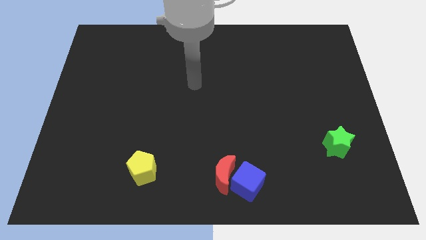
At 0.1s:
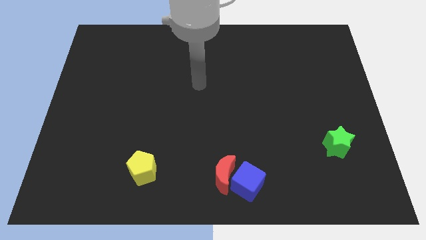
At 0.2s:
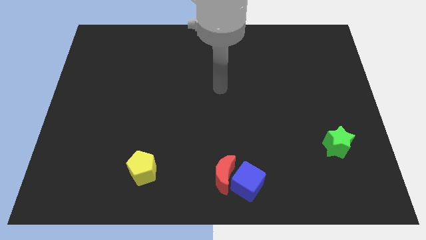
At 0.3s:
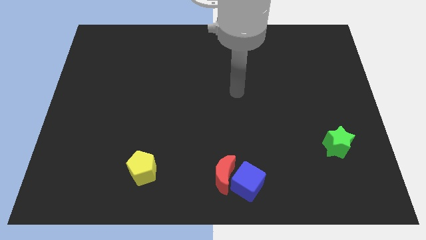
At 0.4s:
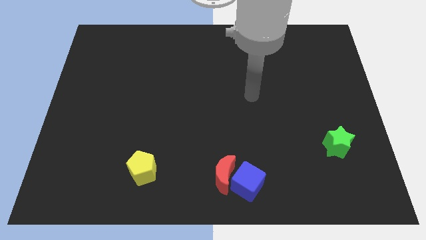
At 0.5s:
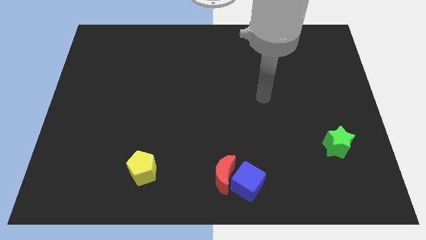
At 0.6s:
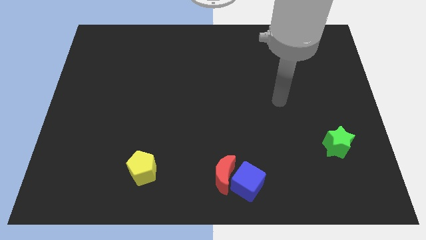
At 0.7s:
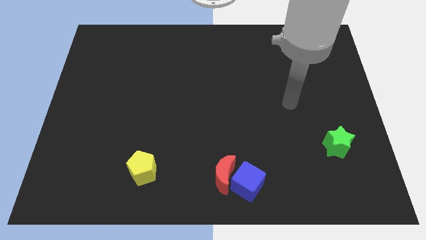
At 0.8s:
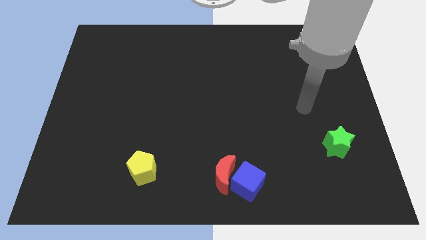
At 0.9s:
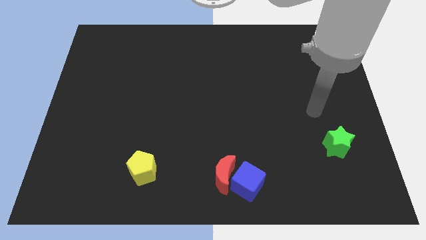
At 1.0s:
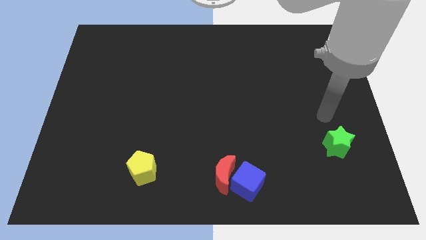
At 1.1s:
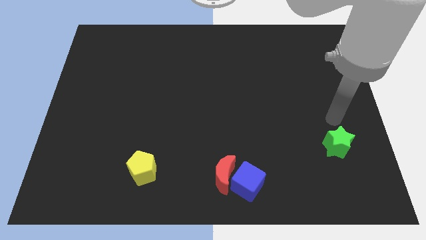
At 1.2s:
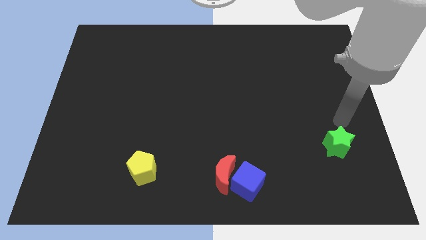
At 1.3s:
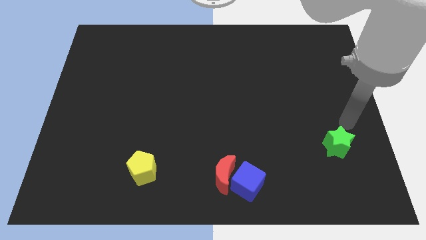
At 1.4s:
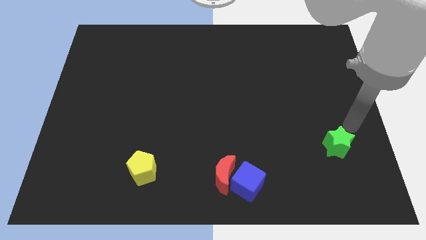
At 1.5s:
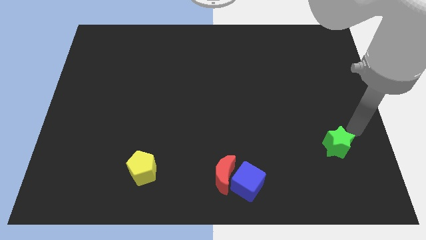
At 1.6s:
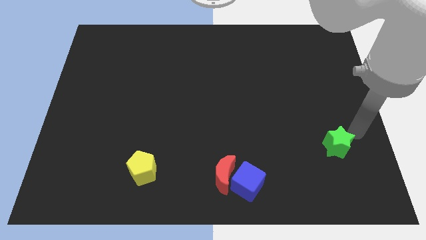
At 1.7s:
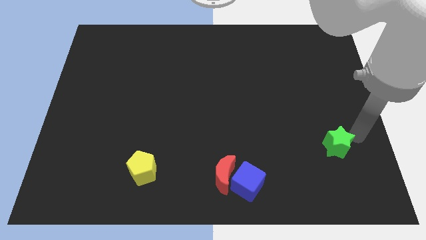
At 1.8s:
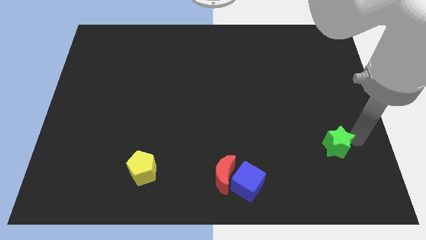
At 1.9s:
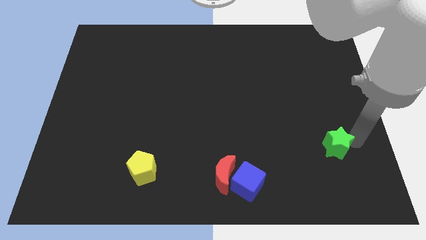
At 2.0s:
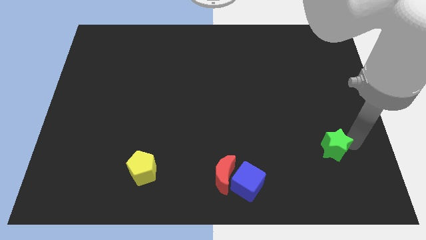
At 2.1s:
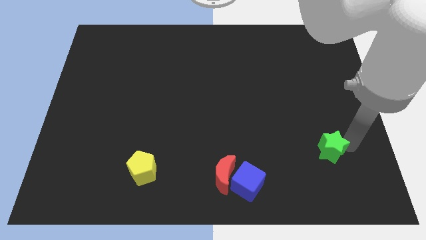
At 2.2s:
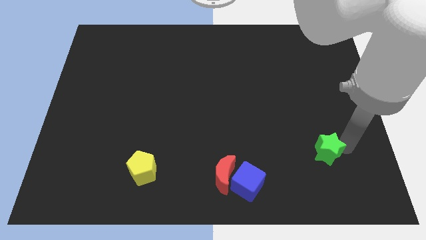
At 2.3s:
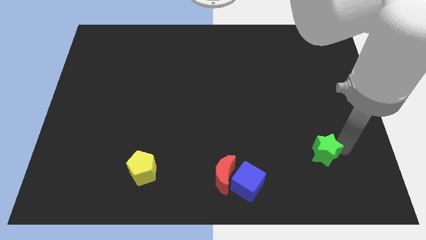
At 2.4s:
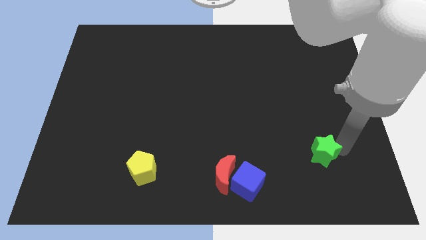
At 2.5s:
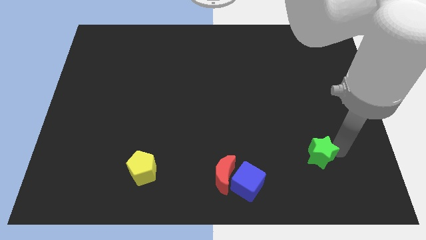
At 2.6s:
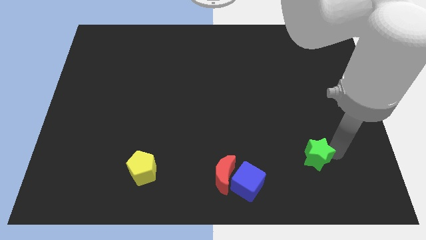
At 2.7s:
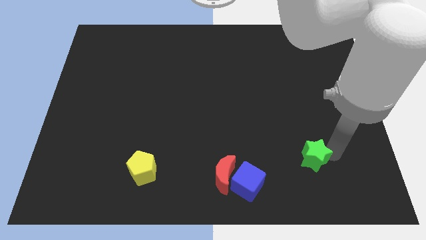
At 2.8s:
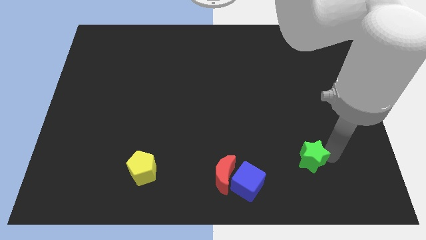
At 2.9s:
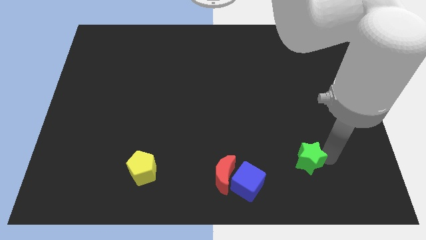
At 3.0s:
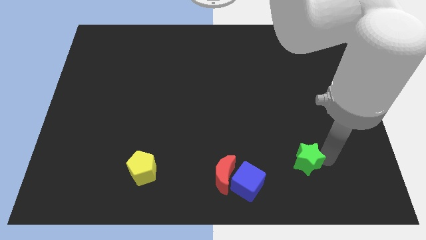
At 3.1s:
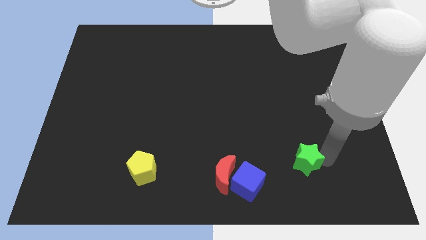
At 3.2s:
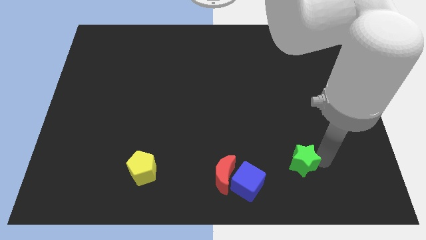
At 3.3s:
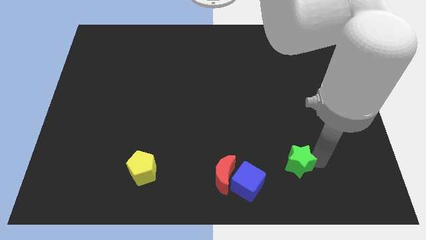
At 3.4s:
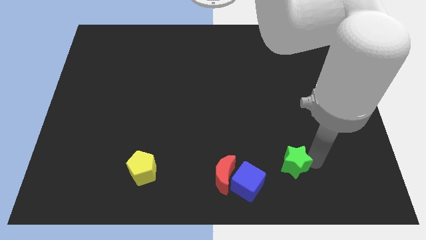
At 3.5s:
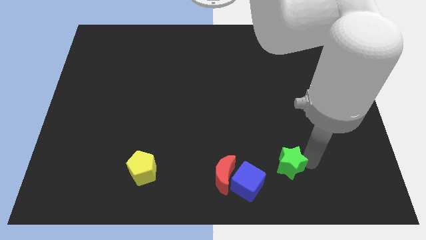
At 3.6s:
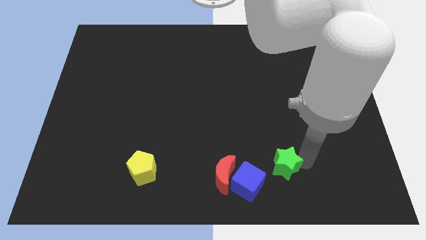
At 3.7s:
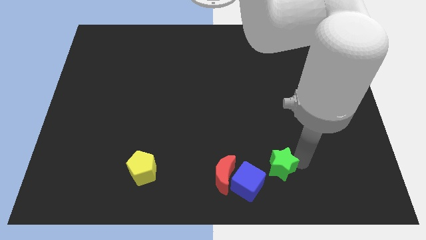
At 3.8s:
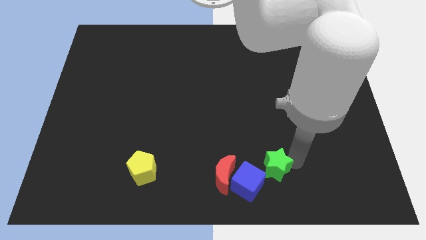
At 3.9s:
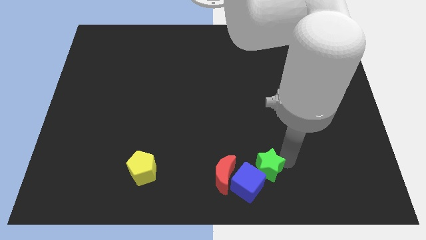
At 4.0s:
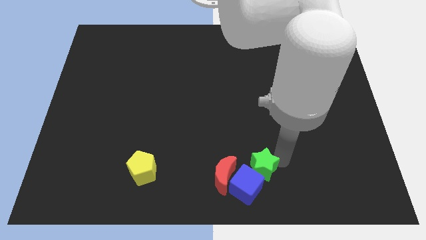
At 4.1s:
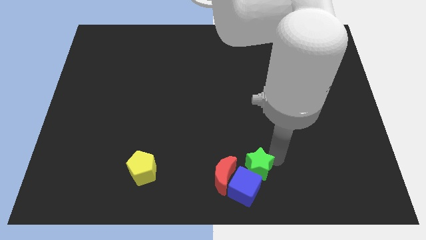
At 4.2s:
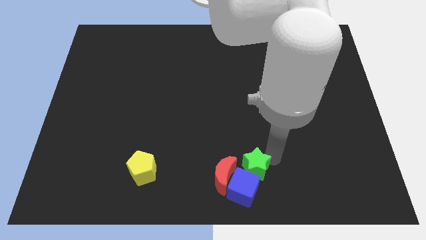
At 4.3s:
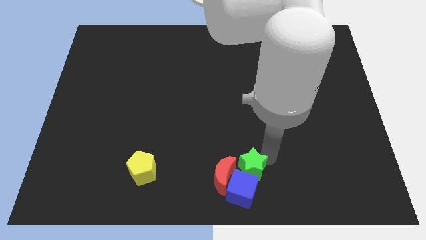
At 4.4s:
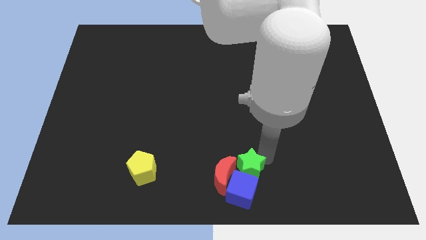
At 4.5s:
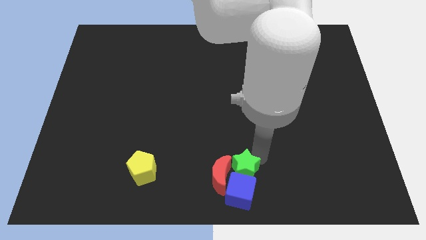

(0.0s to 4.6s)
put the green block next to the red block

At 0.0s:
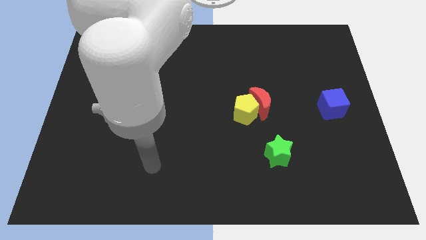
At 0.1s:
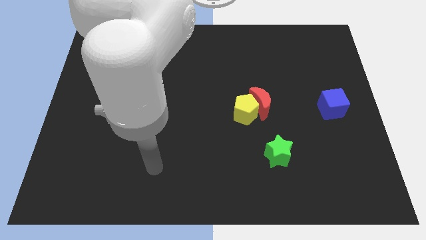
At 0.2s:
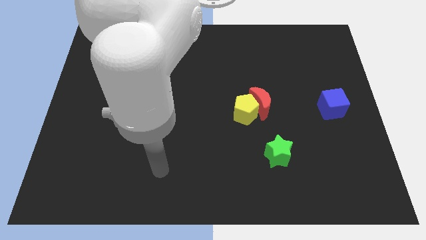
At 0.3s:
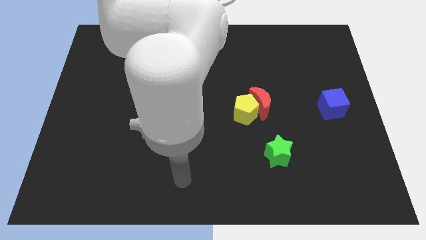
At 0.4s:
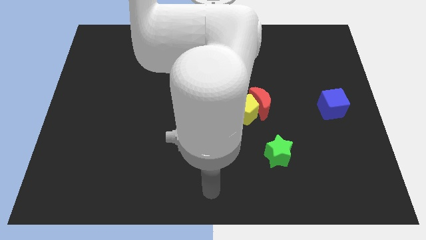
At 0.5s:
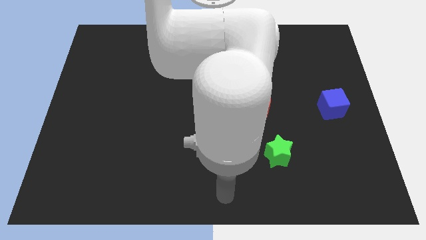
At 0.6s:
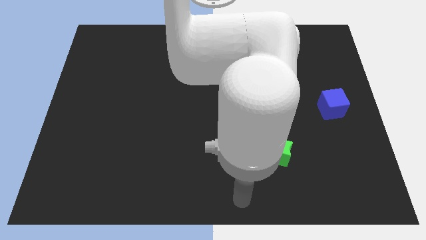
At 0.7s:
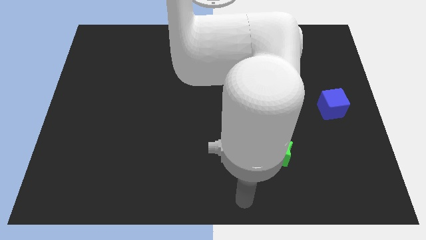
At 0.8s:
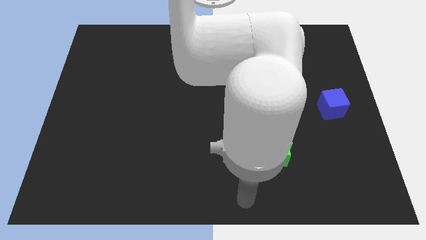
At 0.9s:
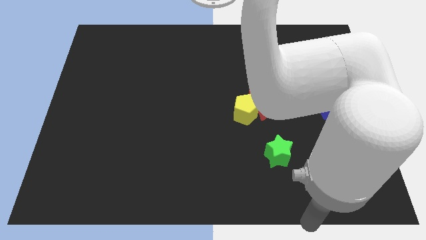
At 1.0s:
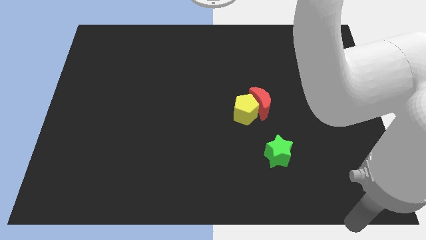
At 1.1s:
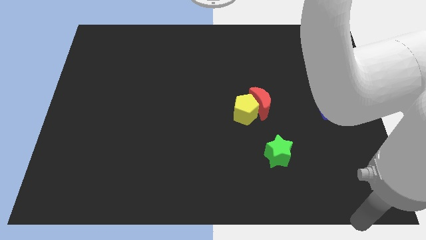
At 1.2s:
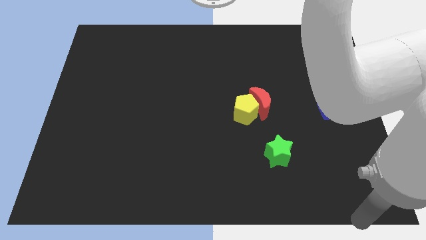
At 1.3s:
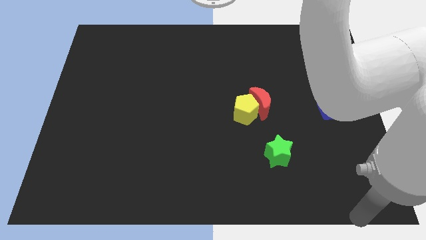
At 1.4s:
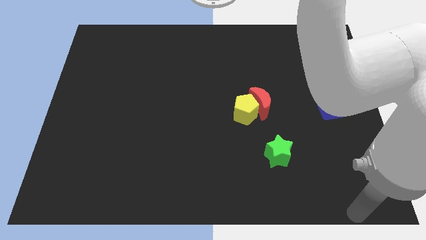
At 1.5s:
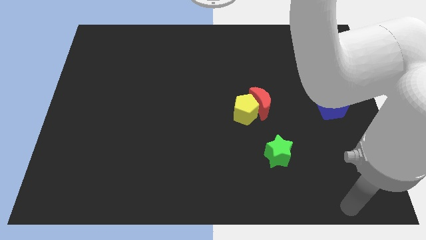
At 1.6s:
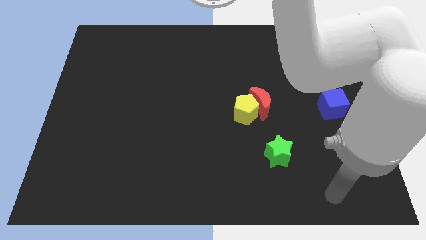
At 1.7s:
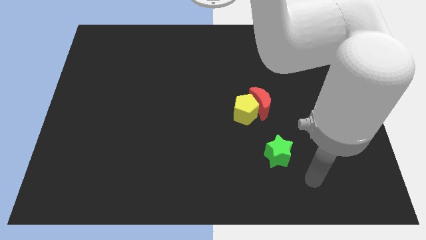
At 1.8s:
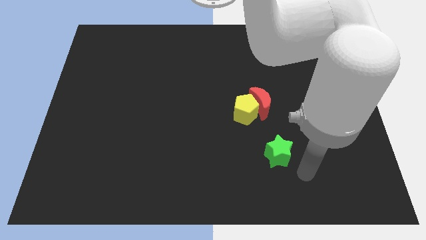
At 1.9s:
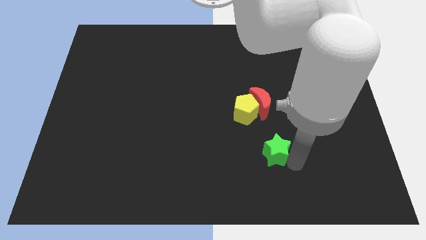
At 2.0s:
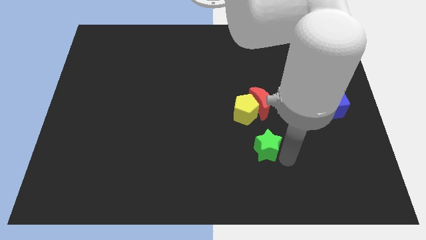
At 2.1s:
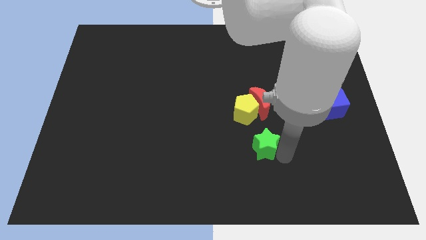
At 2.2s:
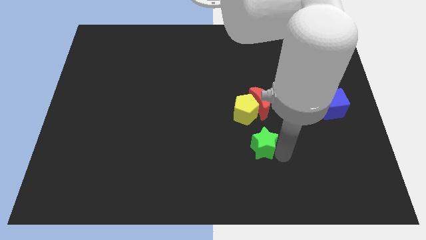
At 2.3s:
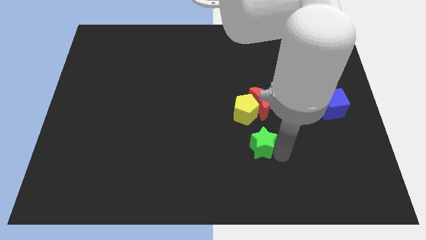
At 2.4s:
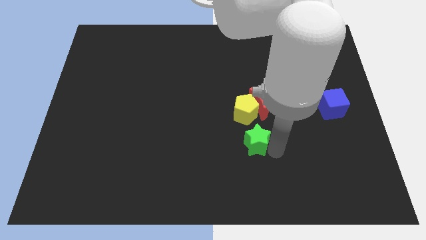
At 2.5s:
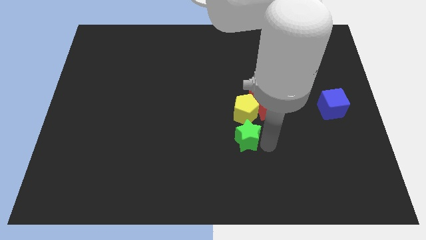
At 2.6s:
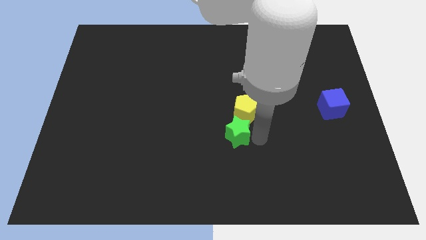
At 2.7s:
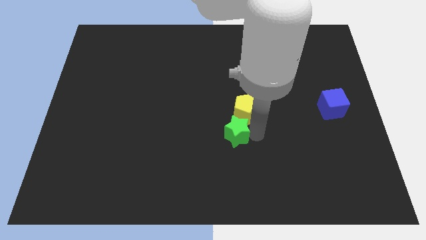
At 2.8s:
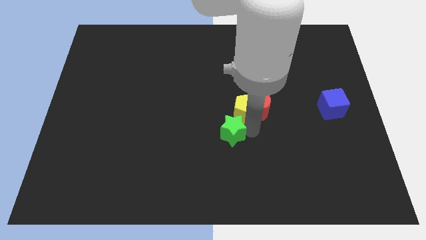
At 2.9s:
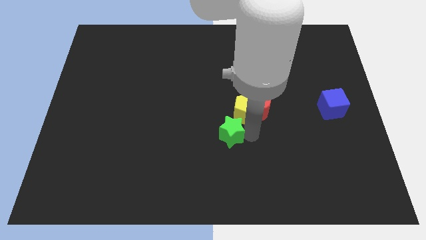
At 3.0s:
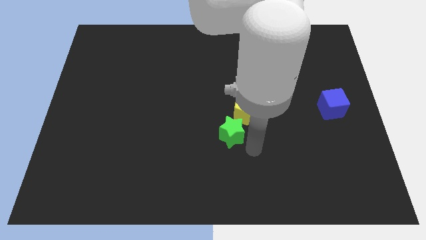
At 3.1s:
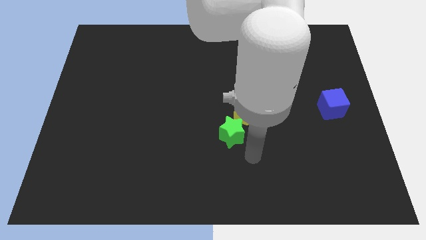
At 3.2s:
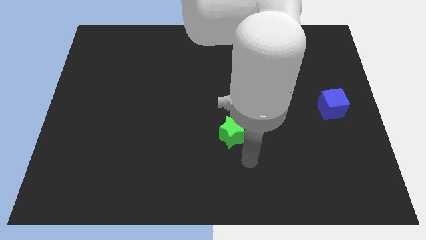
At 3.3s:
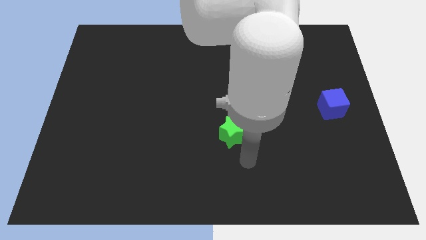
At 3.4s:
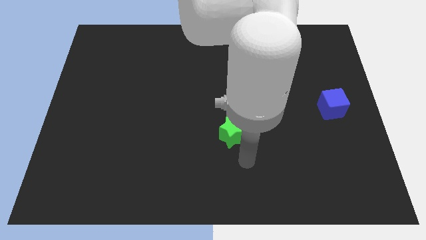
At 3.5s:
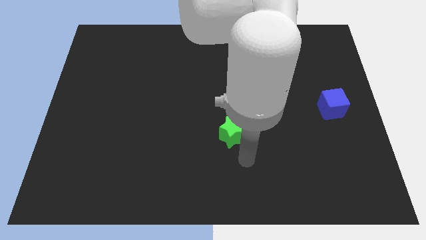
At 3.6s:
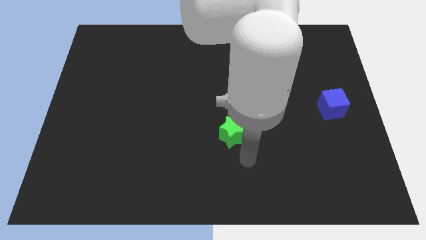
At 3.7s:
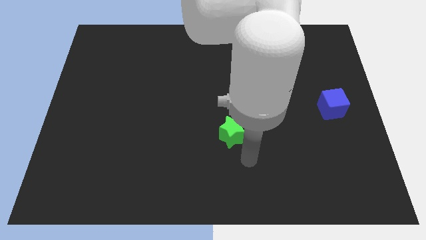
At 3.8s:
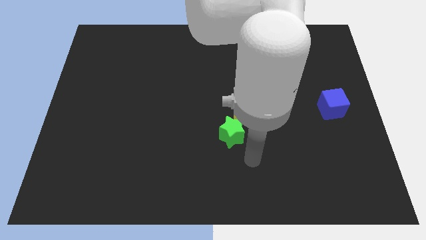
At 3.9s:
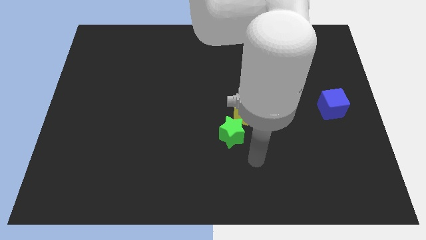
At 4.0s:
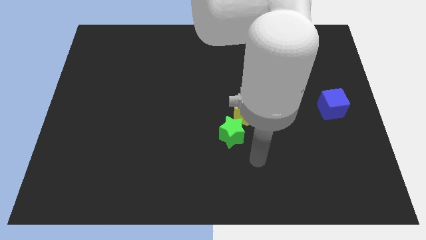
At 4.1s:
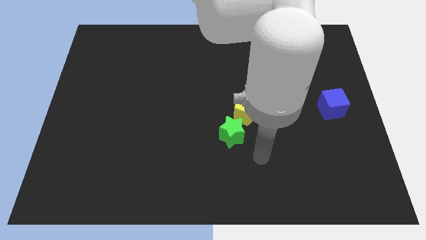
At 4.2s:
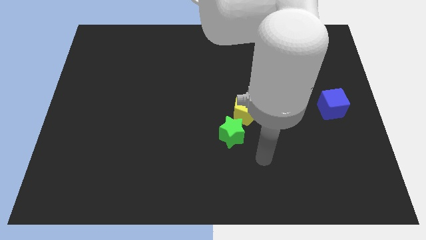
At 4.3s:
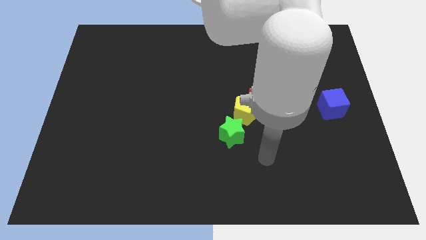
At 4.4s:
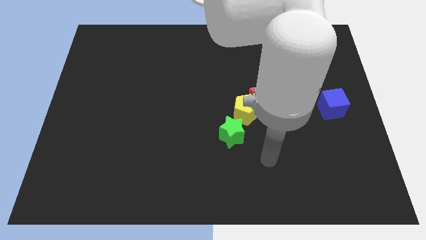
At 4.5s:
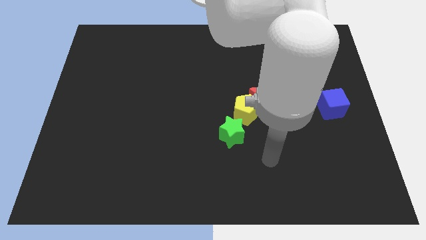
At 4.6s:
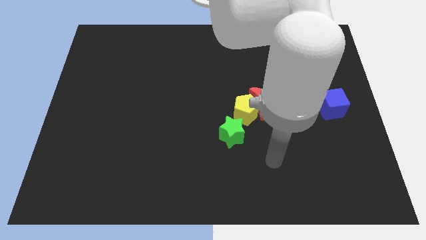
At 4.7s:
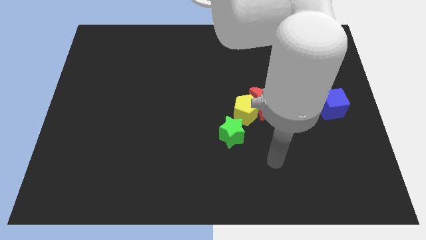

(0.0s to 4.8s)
put the star next to the pentagon
